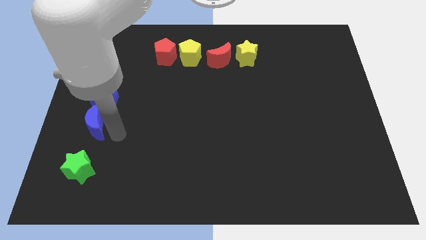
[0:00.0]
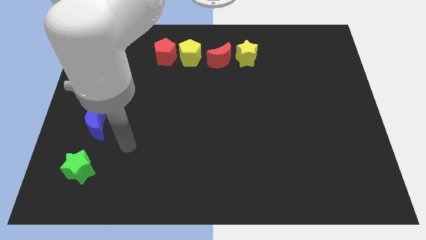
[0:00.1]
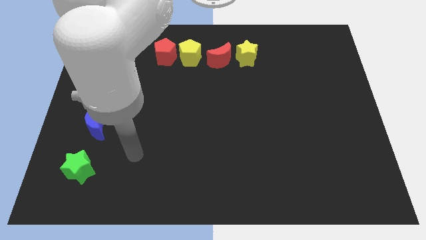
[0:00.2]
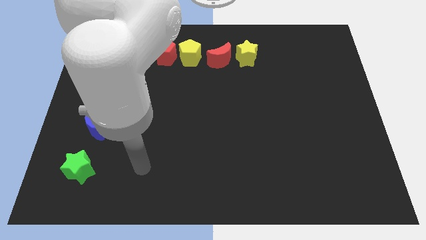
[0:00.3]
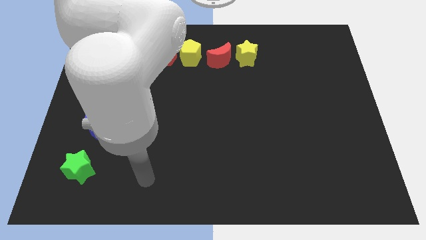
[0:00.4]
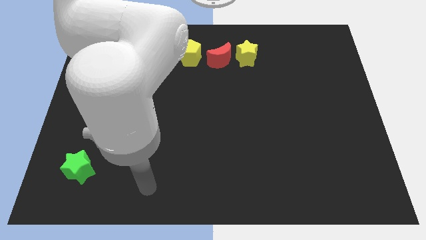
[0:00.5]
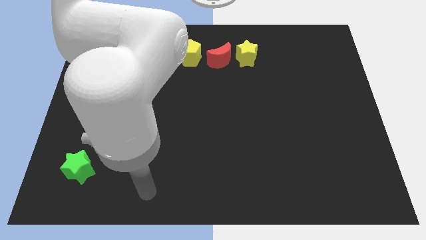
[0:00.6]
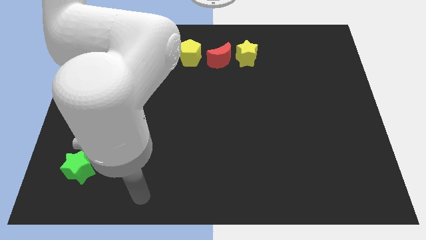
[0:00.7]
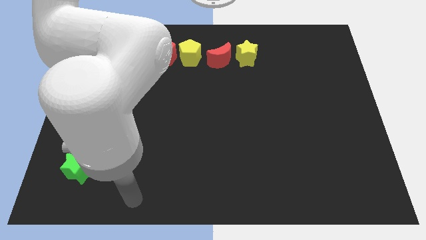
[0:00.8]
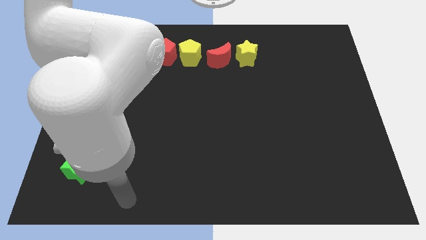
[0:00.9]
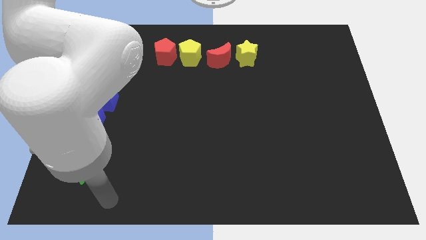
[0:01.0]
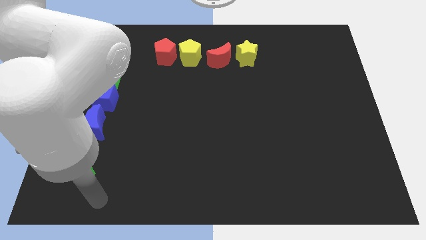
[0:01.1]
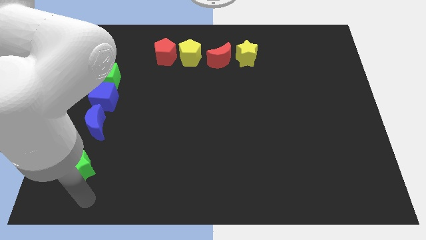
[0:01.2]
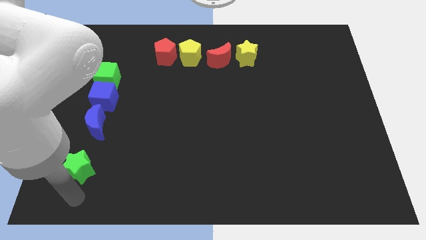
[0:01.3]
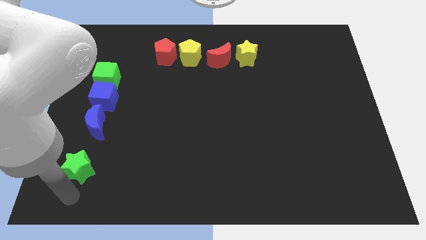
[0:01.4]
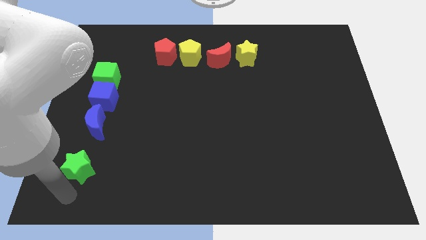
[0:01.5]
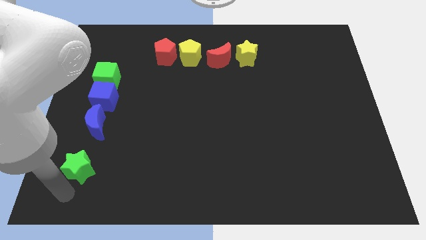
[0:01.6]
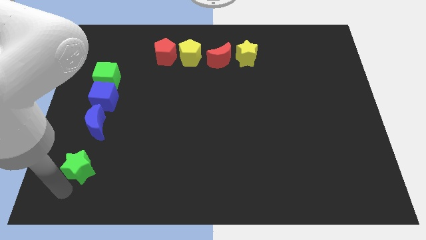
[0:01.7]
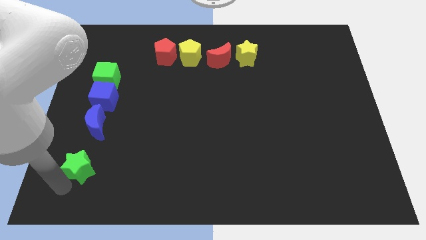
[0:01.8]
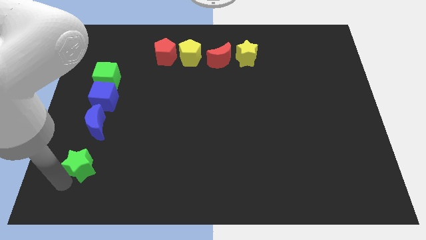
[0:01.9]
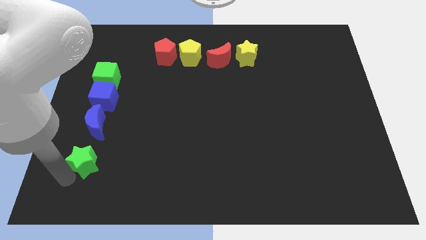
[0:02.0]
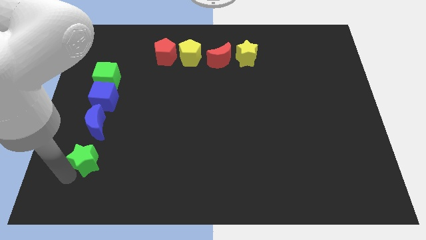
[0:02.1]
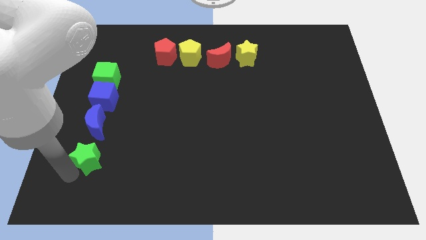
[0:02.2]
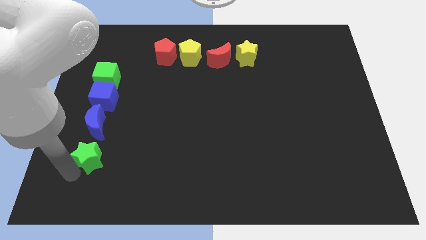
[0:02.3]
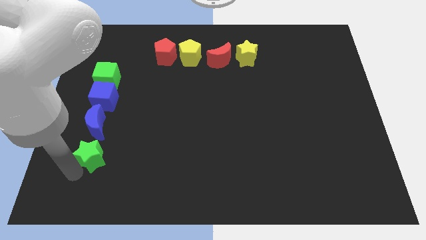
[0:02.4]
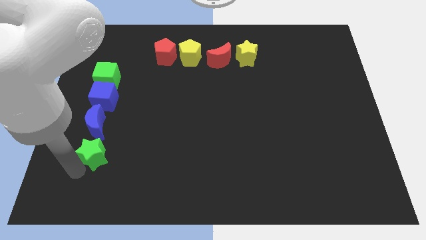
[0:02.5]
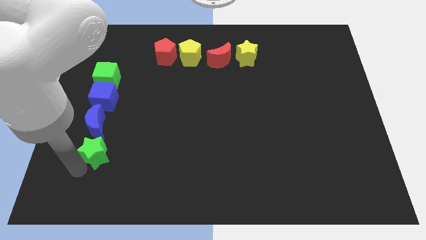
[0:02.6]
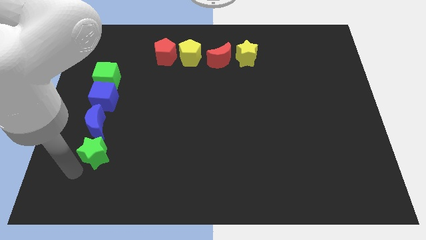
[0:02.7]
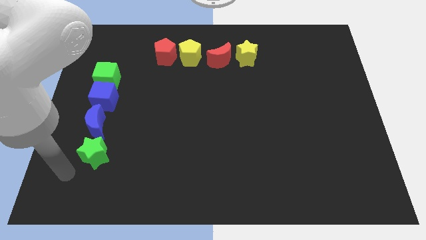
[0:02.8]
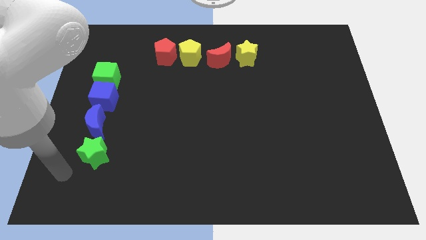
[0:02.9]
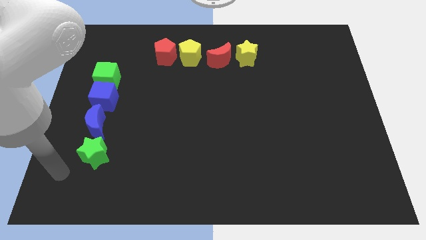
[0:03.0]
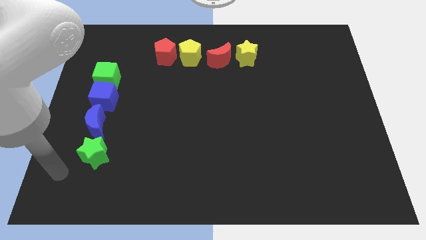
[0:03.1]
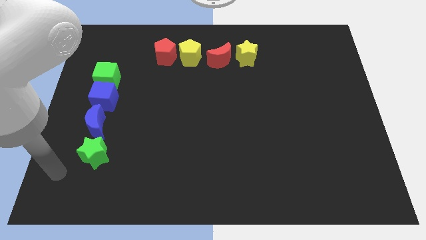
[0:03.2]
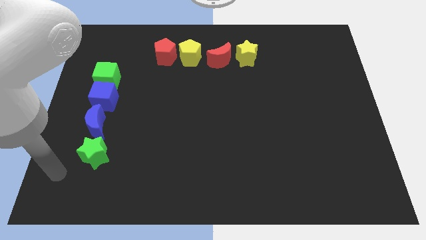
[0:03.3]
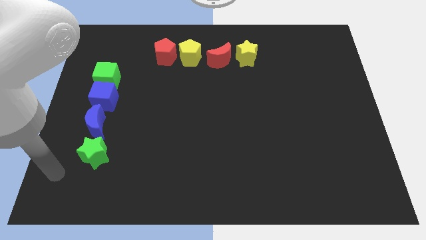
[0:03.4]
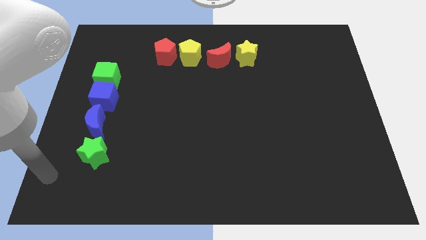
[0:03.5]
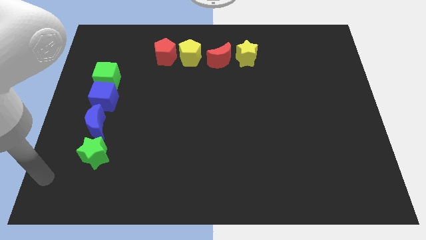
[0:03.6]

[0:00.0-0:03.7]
move the green star to the bottom side of the blue moon

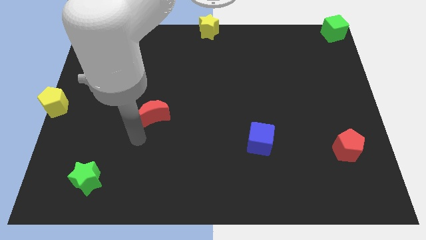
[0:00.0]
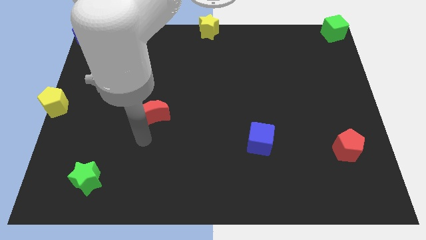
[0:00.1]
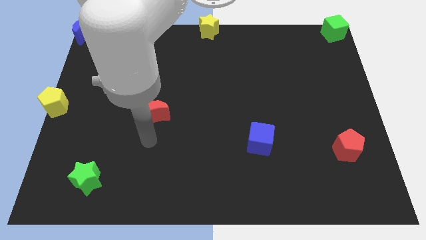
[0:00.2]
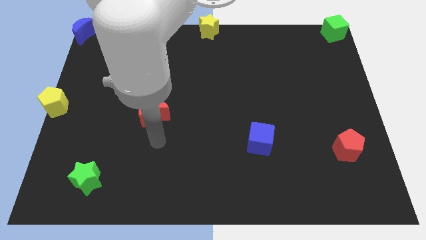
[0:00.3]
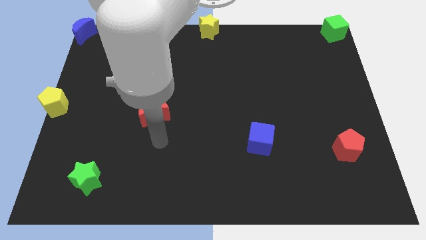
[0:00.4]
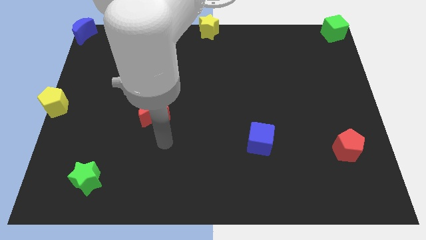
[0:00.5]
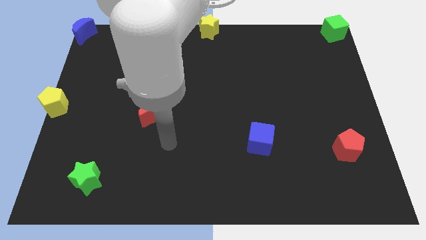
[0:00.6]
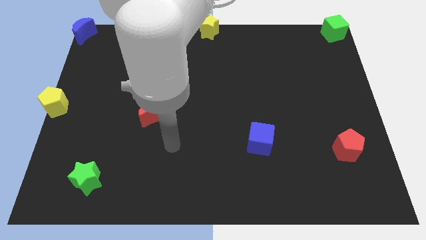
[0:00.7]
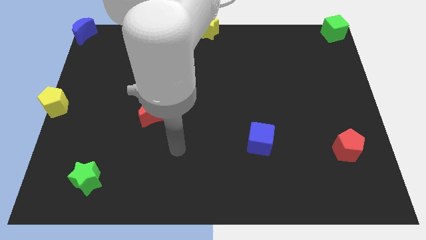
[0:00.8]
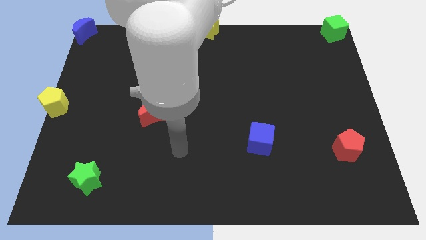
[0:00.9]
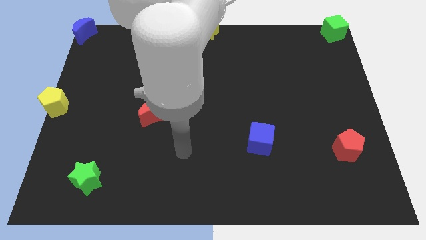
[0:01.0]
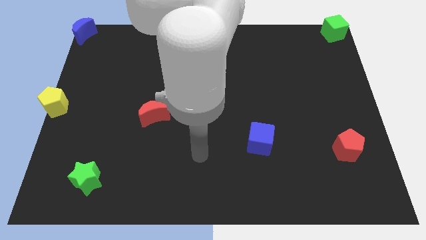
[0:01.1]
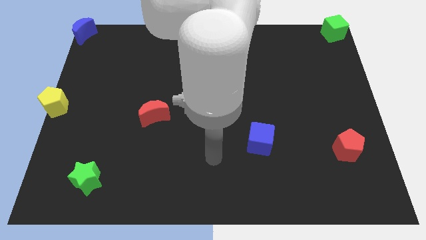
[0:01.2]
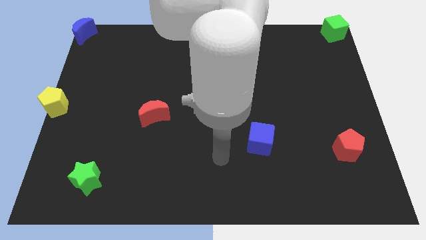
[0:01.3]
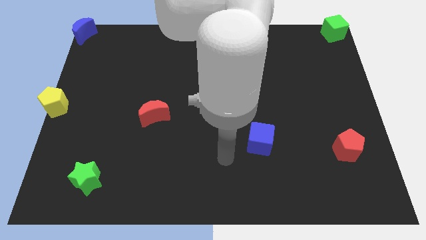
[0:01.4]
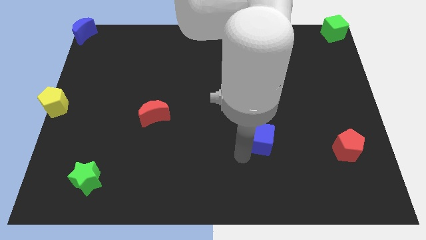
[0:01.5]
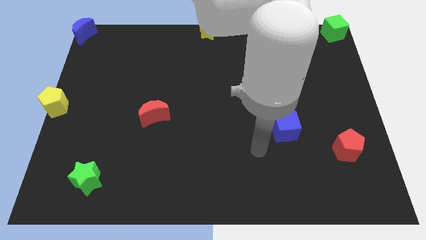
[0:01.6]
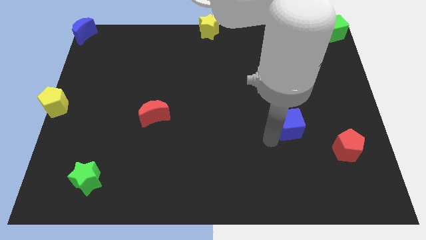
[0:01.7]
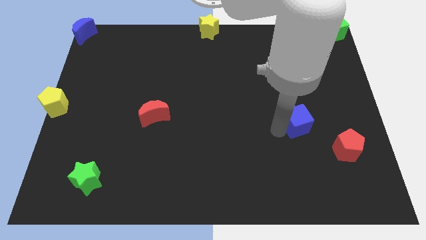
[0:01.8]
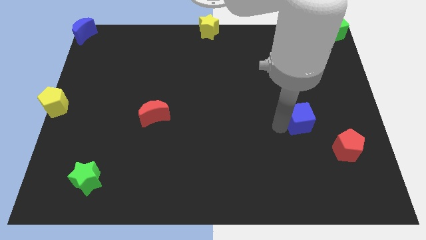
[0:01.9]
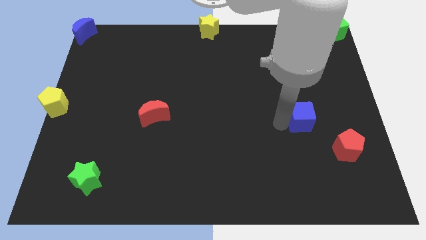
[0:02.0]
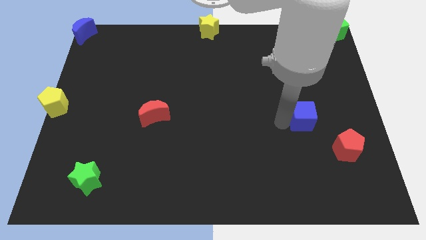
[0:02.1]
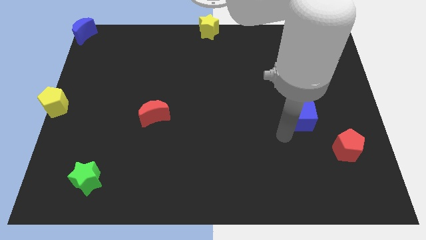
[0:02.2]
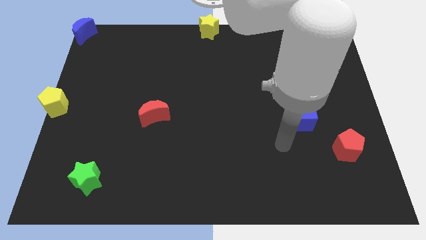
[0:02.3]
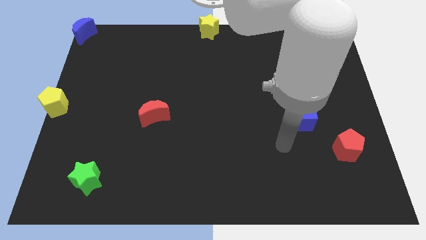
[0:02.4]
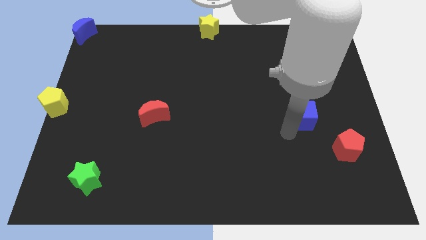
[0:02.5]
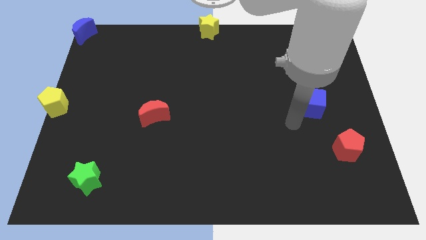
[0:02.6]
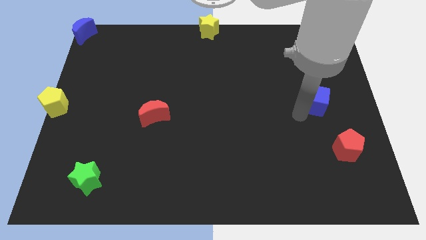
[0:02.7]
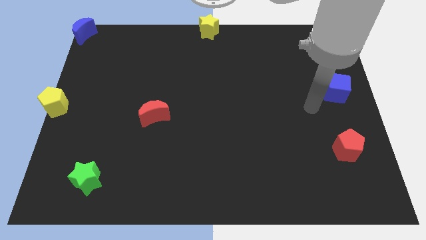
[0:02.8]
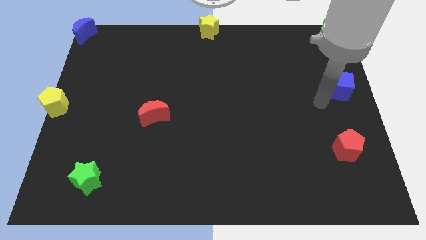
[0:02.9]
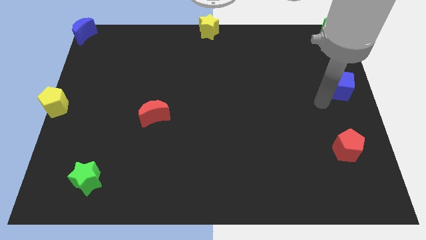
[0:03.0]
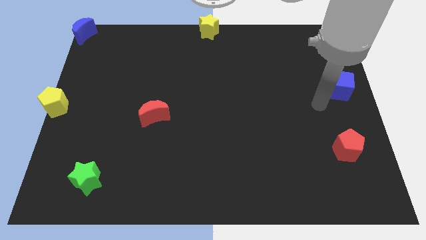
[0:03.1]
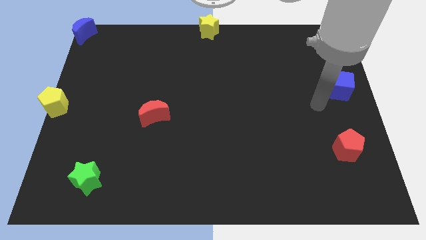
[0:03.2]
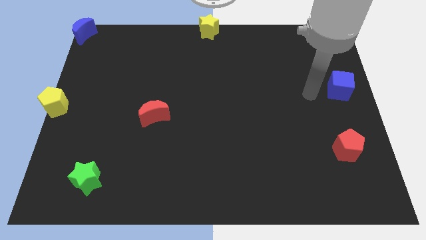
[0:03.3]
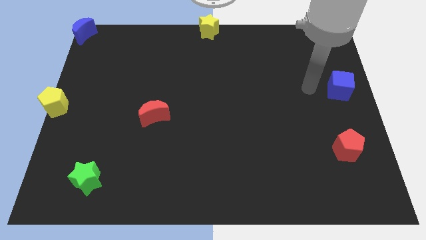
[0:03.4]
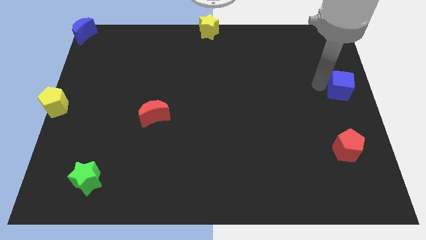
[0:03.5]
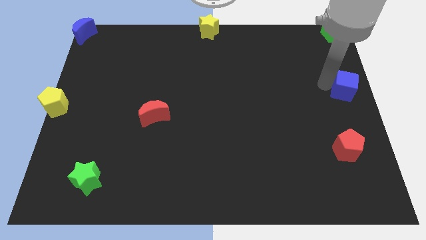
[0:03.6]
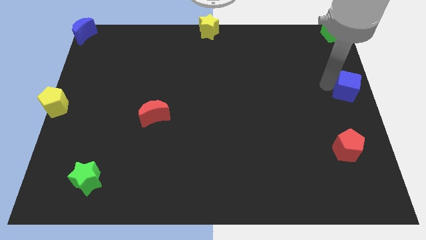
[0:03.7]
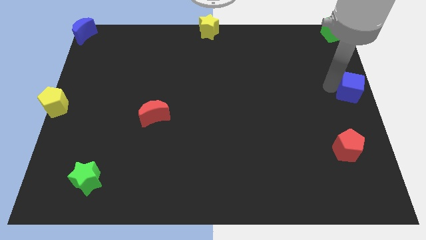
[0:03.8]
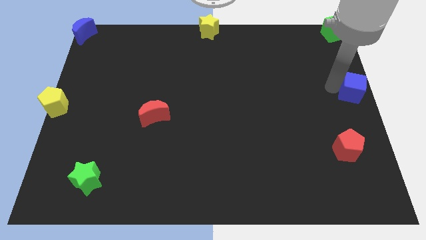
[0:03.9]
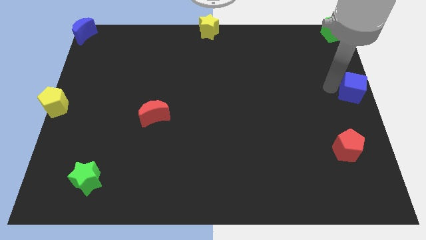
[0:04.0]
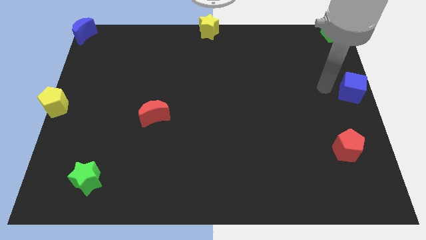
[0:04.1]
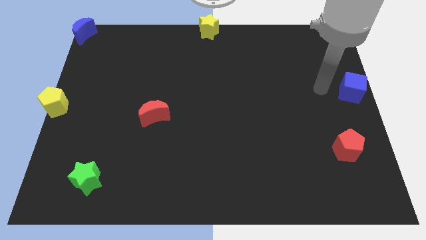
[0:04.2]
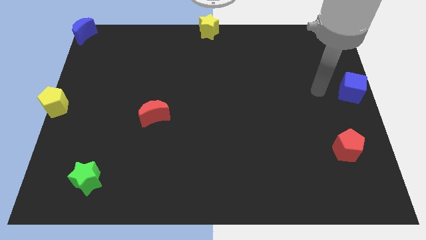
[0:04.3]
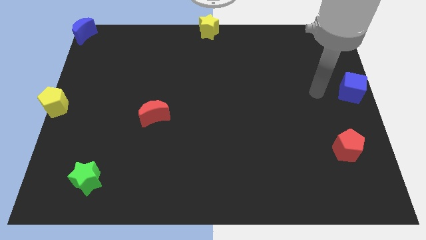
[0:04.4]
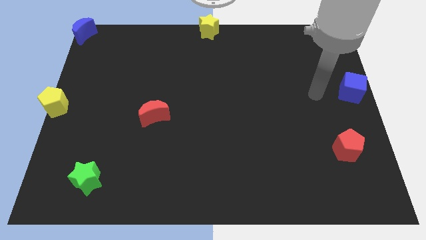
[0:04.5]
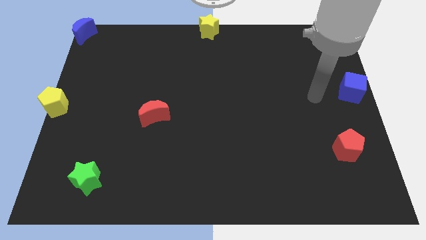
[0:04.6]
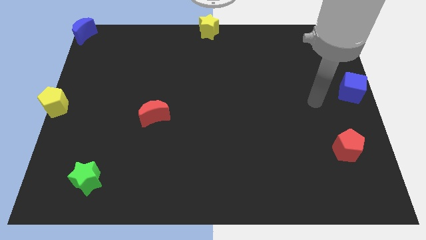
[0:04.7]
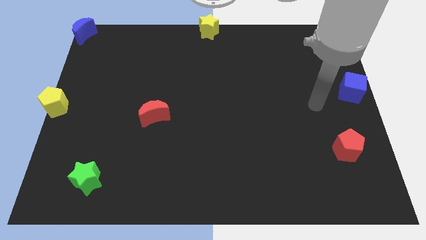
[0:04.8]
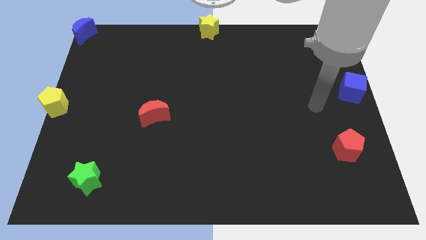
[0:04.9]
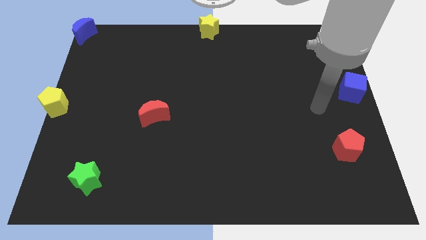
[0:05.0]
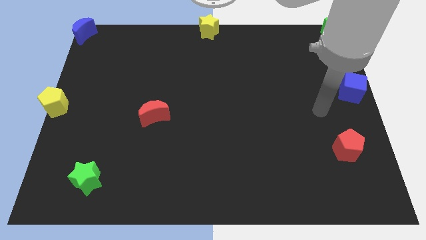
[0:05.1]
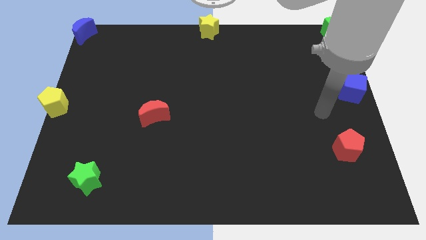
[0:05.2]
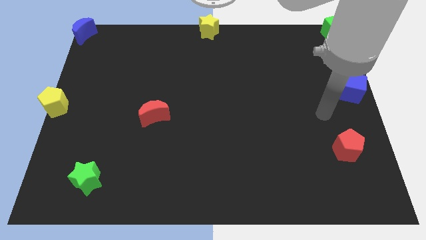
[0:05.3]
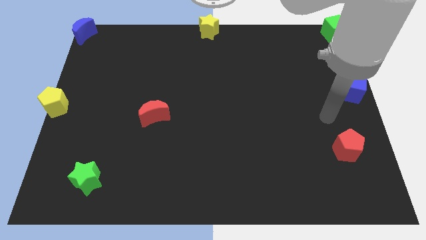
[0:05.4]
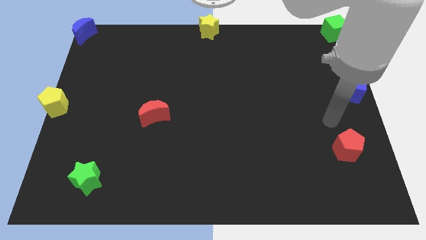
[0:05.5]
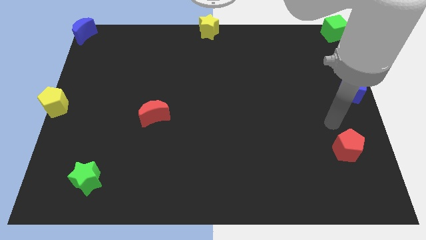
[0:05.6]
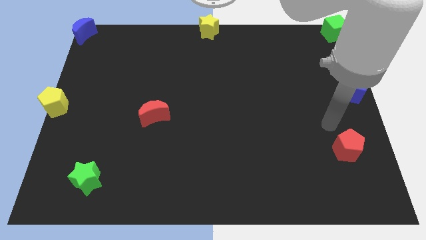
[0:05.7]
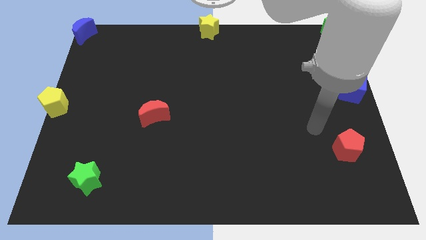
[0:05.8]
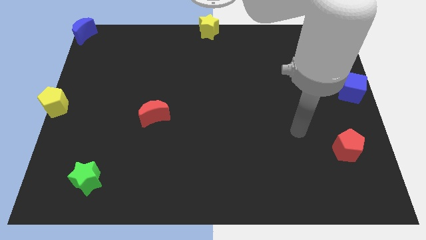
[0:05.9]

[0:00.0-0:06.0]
push the blue cube to the right center of the board
